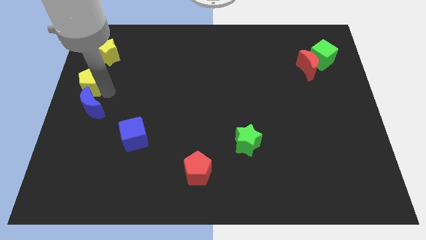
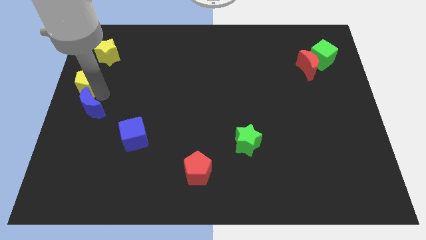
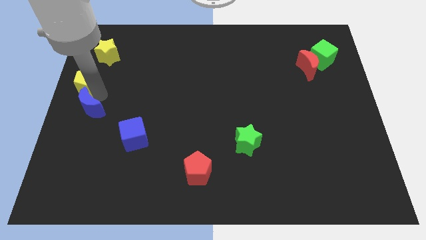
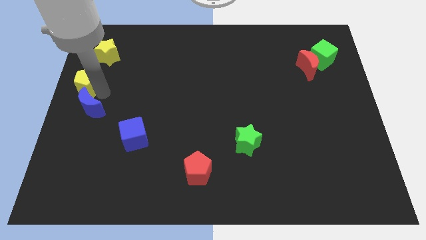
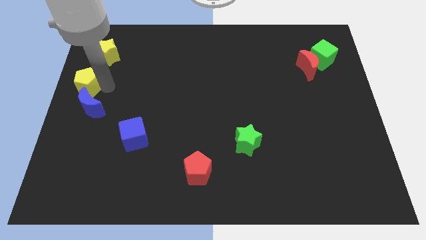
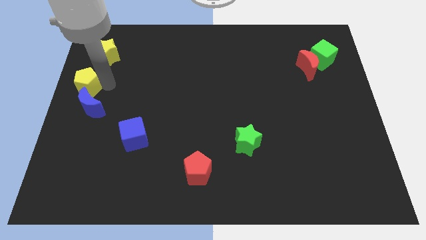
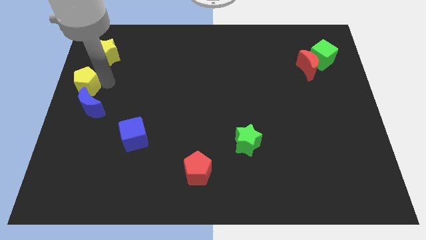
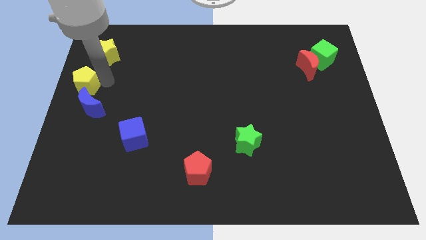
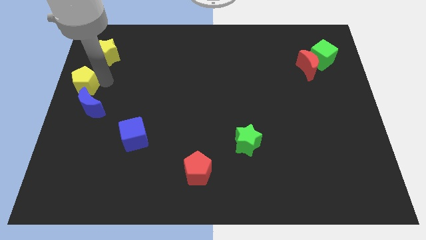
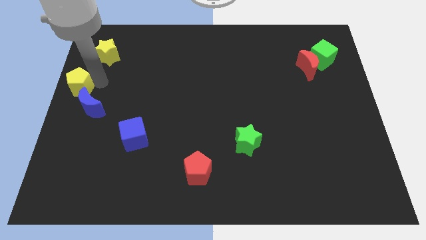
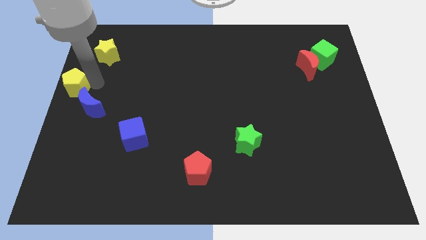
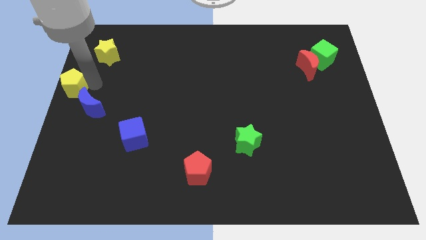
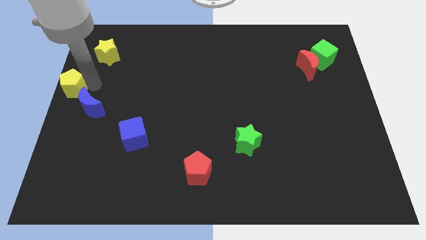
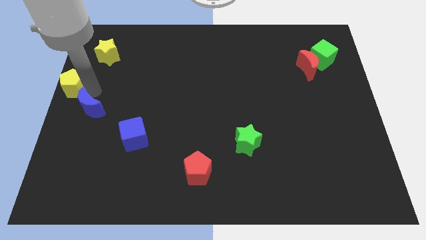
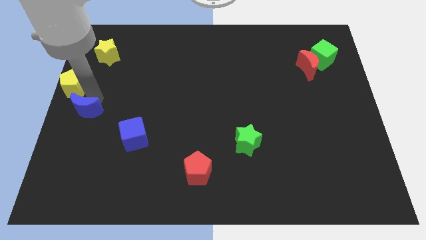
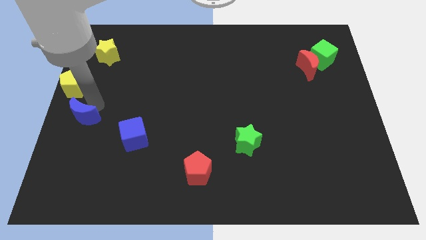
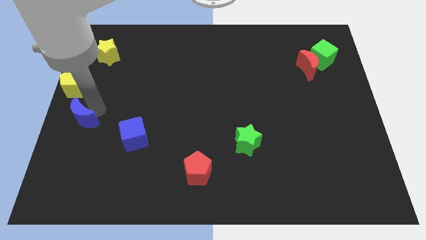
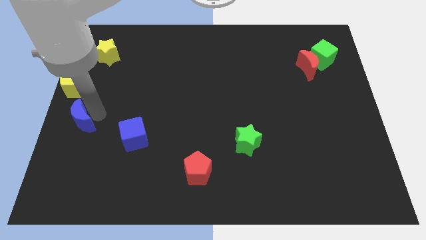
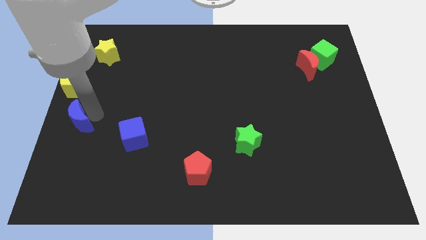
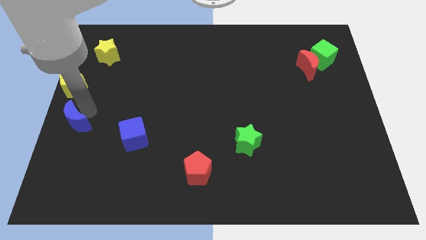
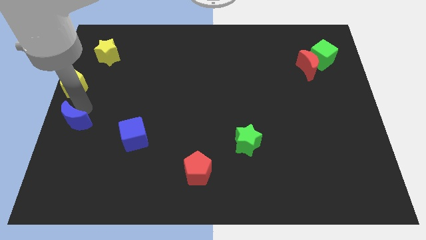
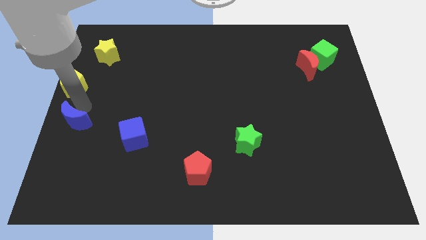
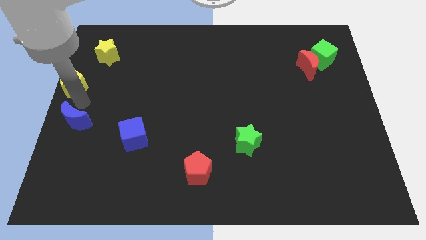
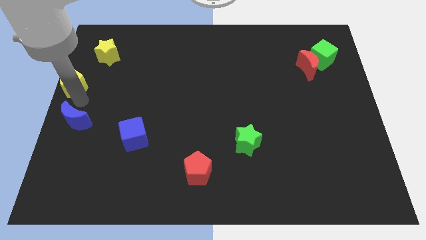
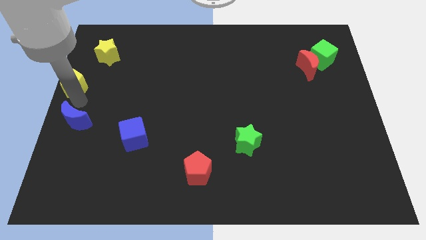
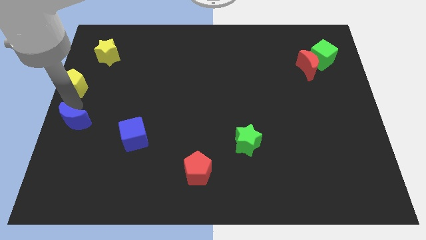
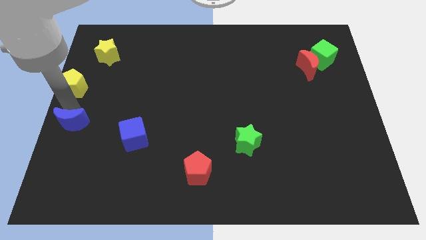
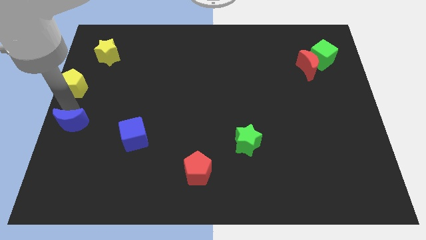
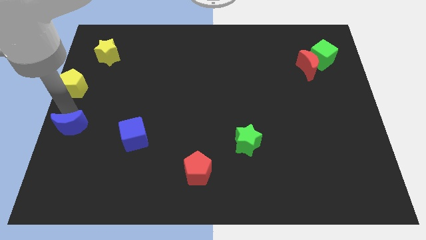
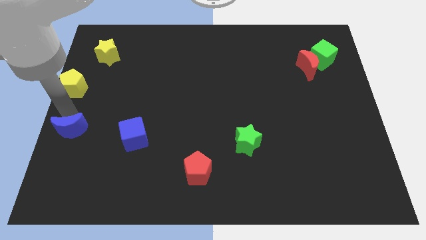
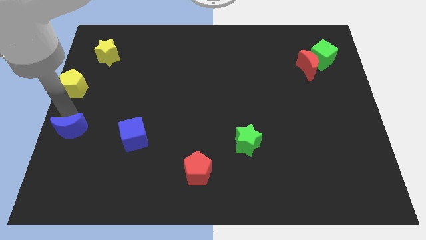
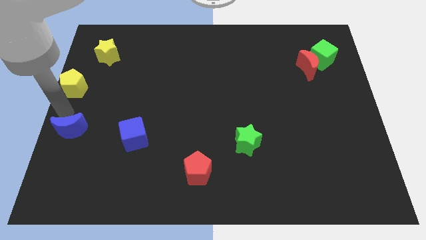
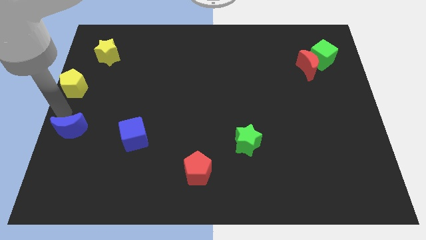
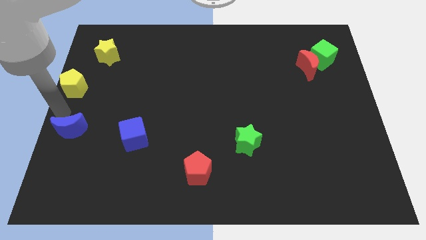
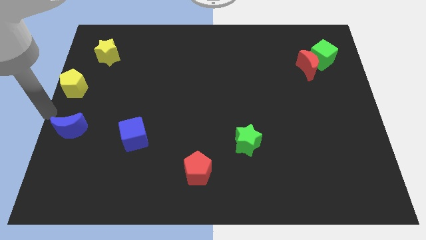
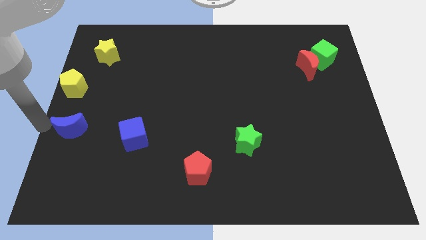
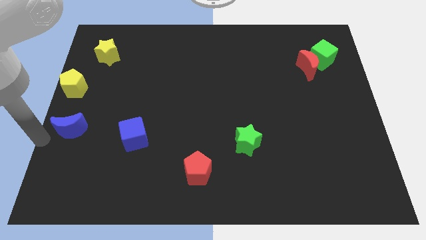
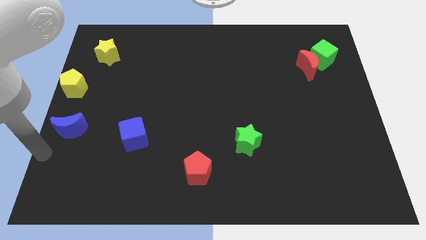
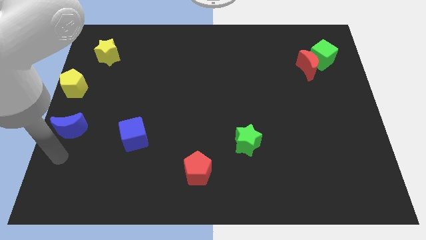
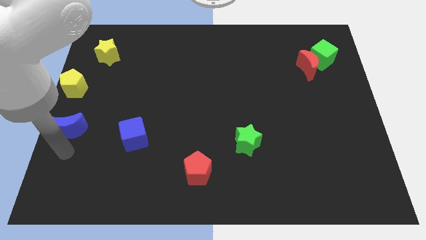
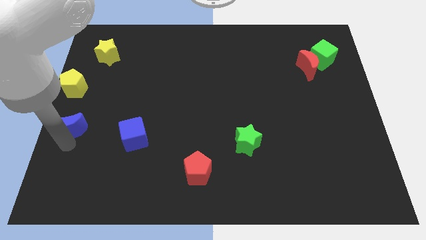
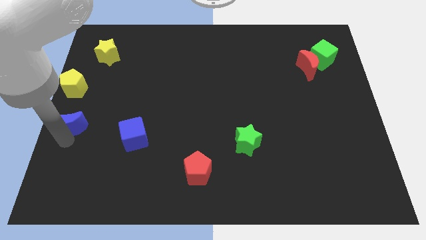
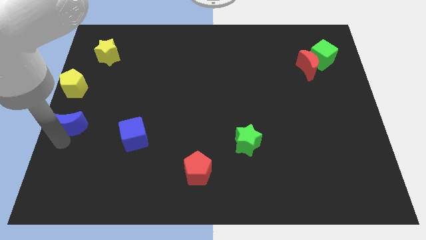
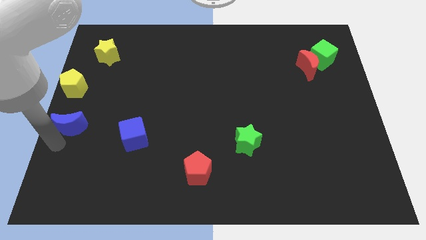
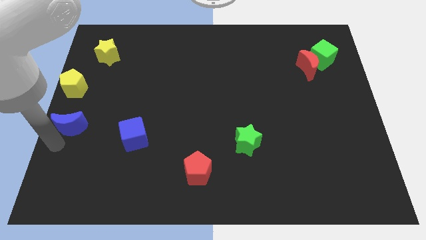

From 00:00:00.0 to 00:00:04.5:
apart blue crescent and yellow pentagon

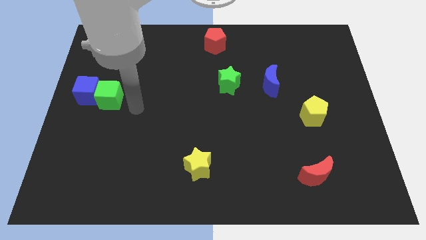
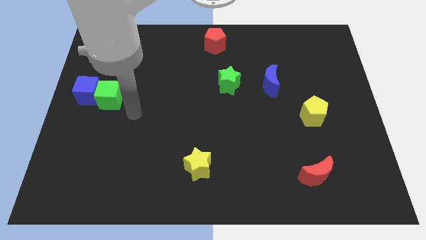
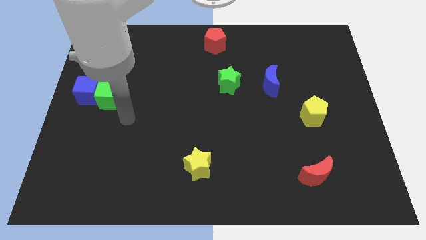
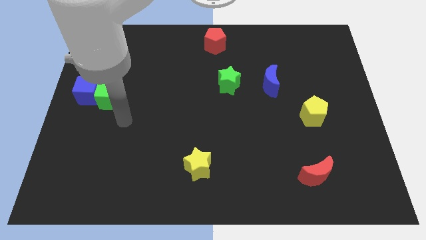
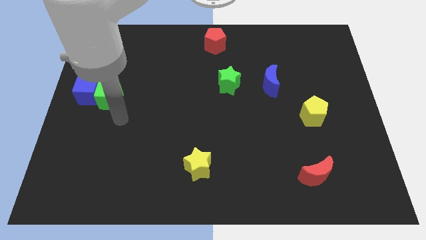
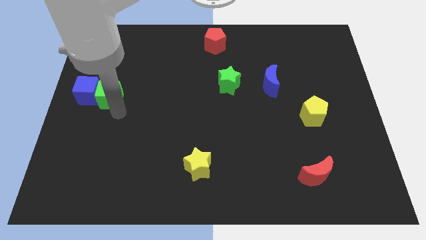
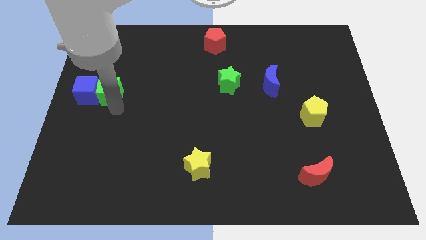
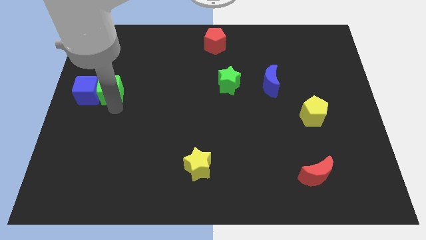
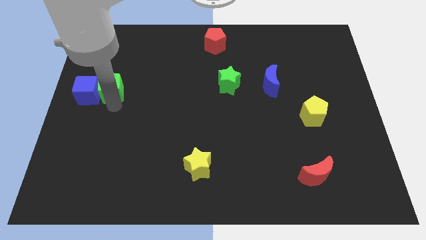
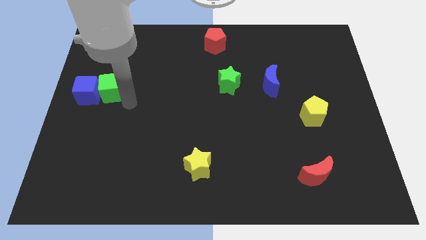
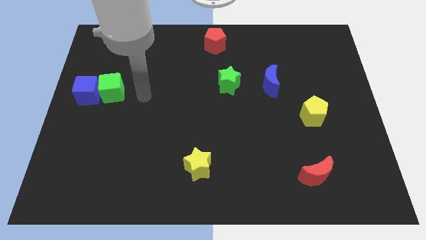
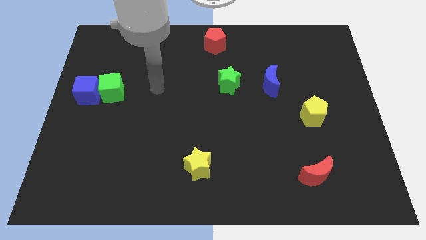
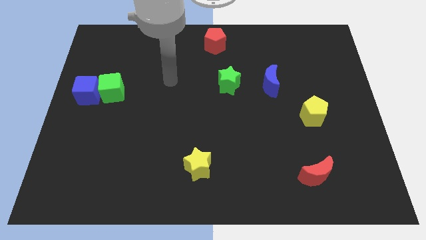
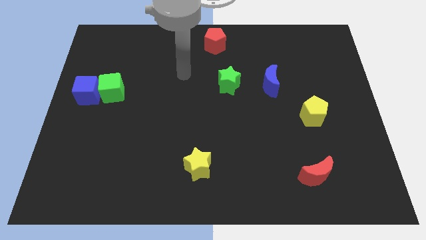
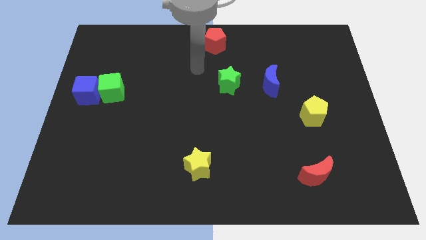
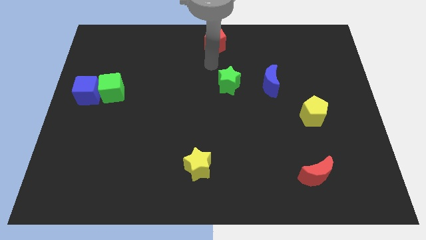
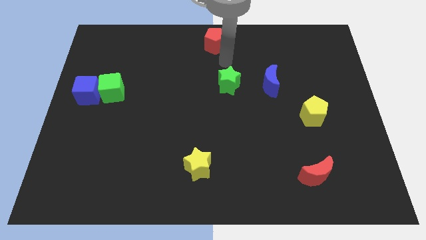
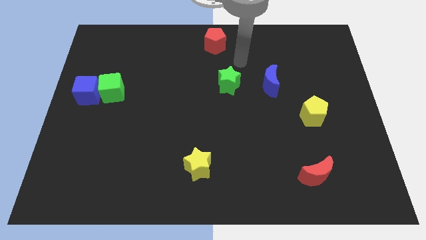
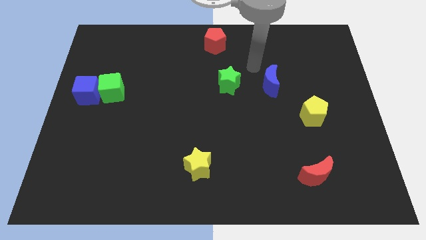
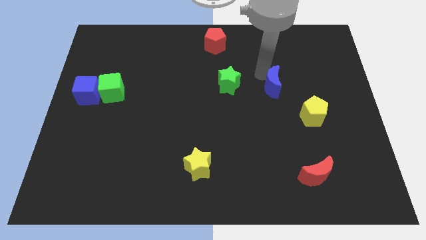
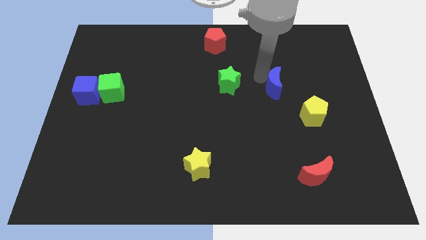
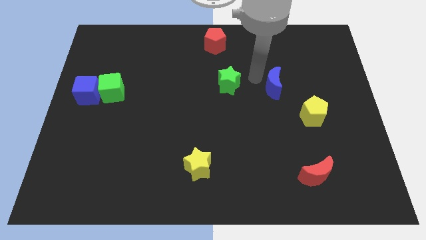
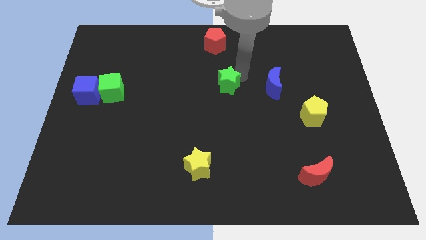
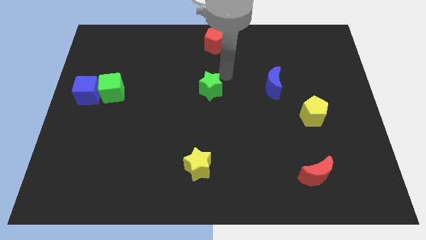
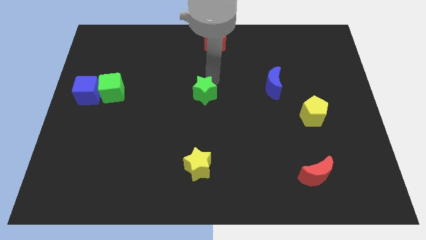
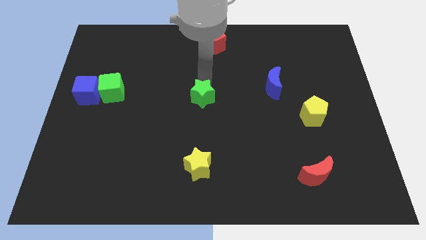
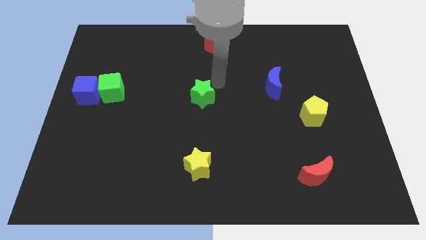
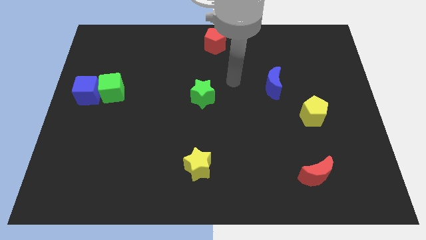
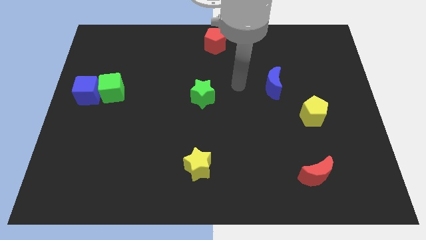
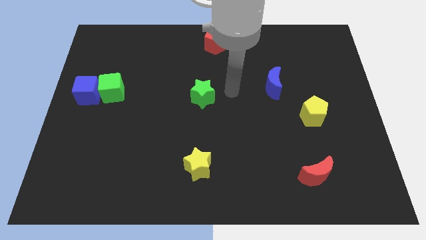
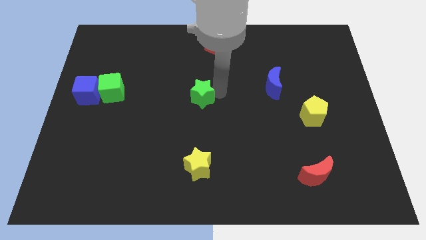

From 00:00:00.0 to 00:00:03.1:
place green star in the center

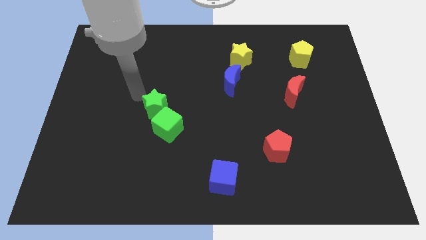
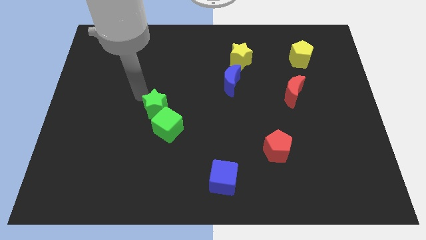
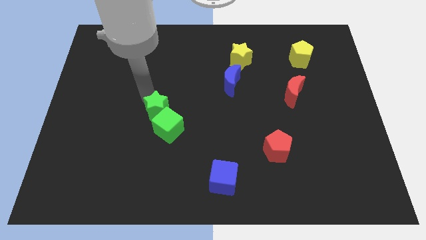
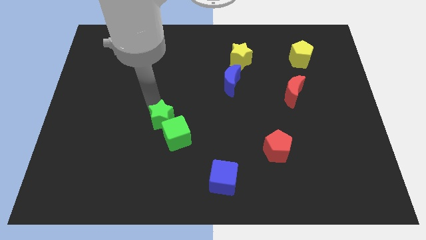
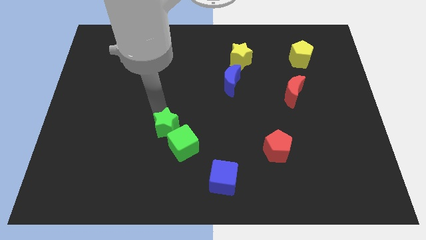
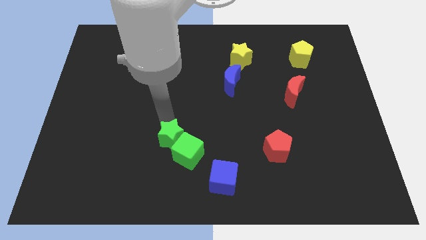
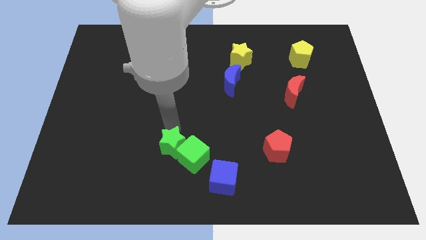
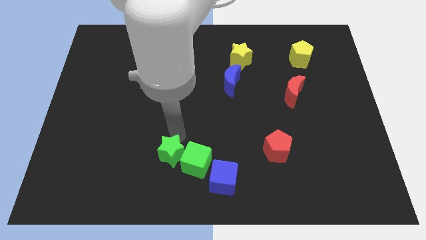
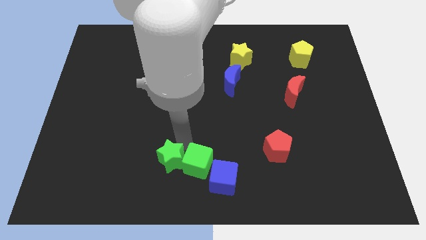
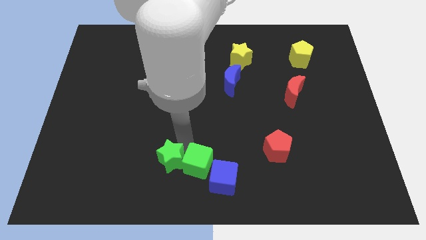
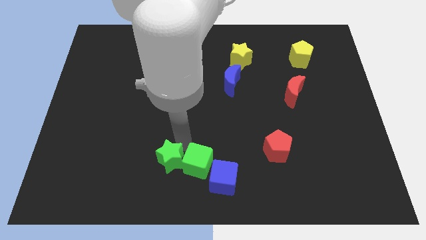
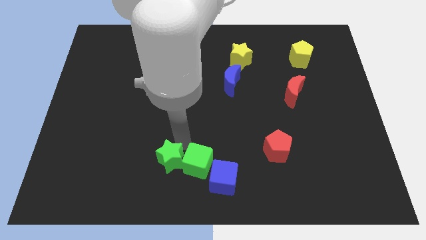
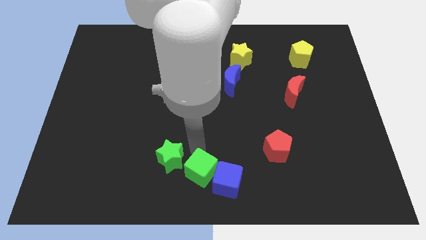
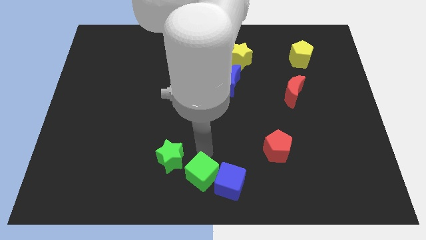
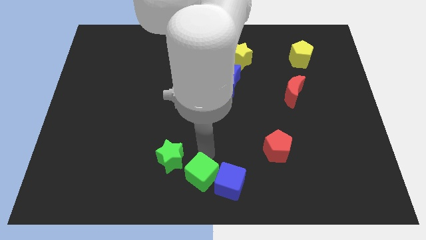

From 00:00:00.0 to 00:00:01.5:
push the green blocks to the left of the blue cube
